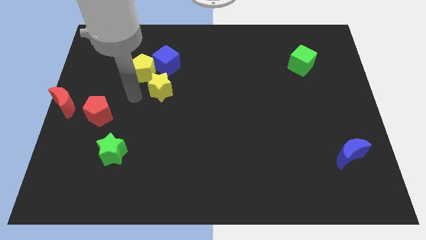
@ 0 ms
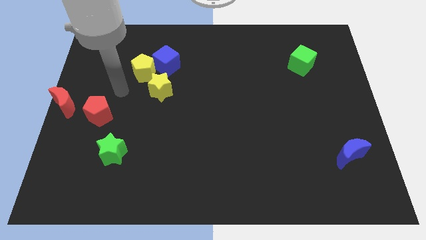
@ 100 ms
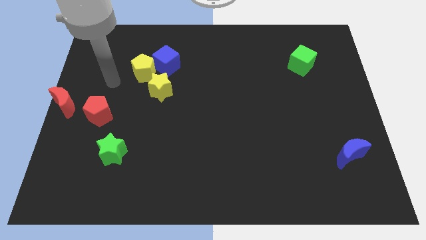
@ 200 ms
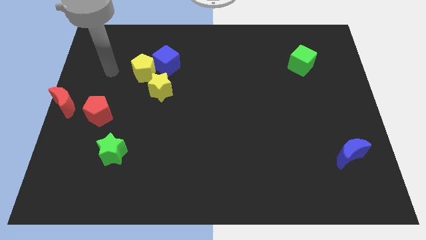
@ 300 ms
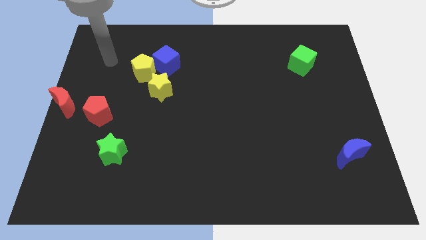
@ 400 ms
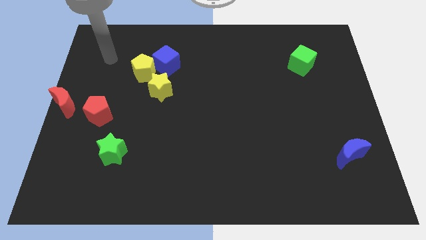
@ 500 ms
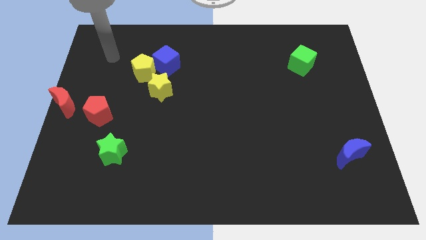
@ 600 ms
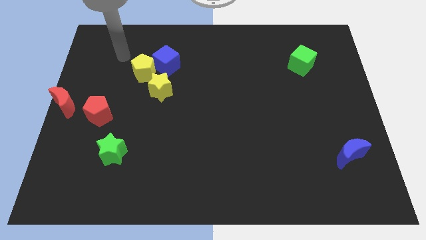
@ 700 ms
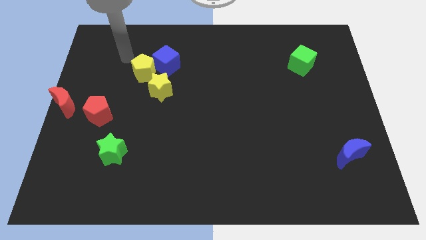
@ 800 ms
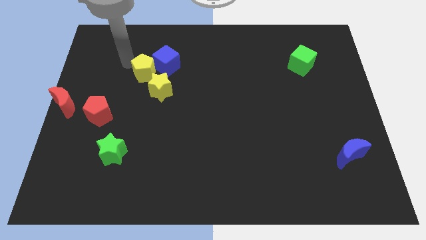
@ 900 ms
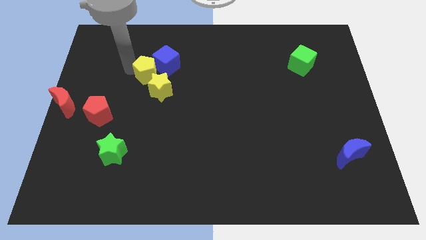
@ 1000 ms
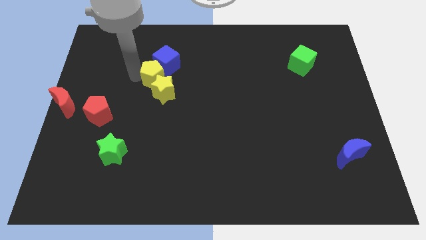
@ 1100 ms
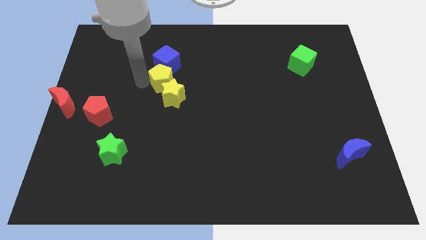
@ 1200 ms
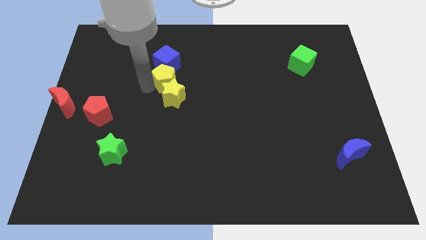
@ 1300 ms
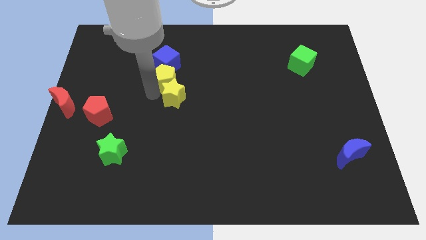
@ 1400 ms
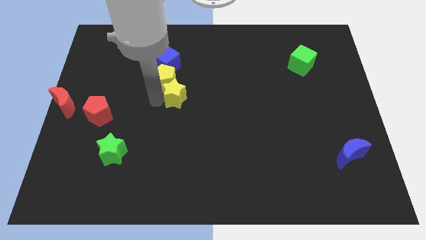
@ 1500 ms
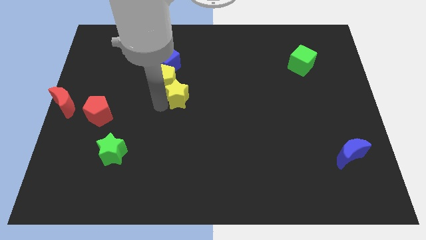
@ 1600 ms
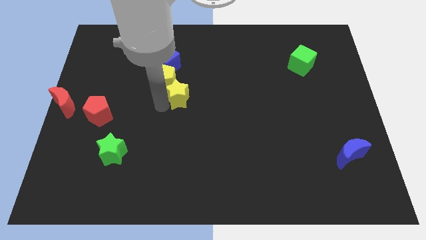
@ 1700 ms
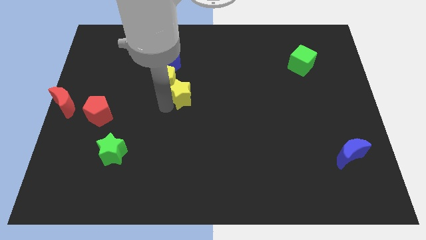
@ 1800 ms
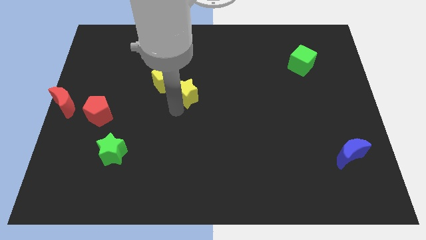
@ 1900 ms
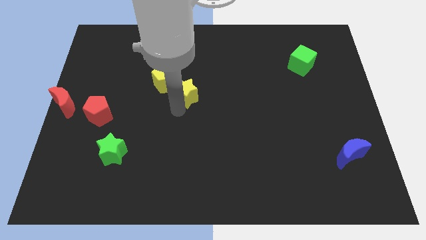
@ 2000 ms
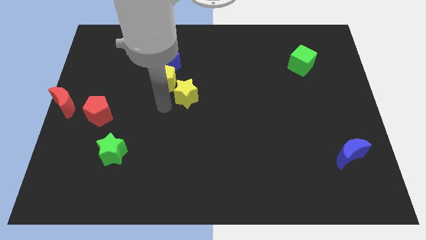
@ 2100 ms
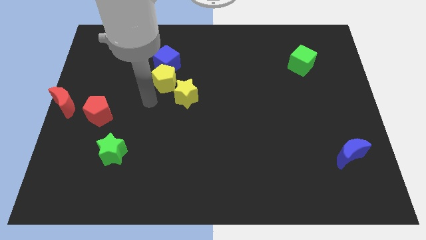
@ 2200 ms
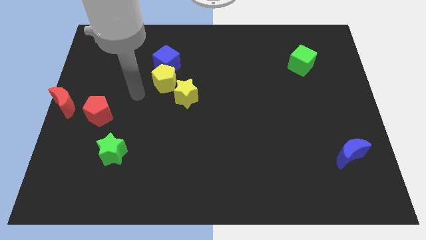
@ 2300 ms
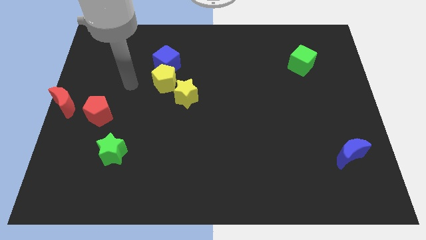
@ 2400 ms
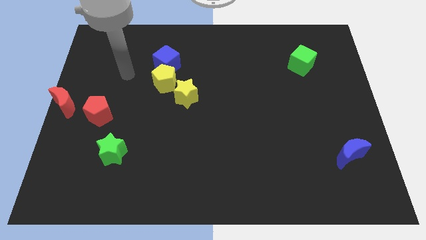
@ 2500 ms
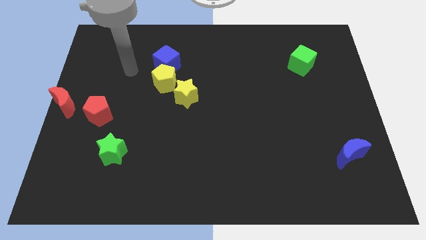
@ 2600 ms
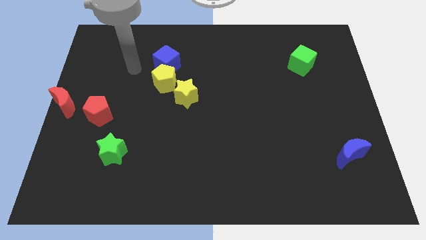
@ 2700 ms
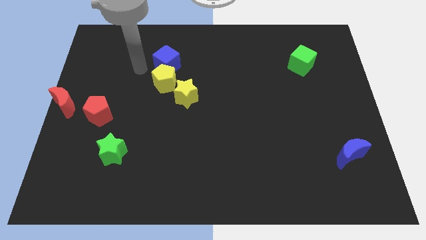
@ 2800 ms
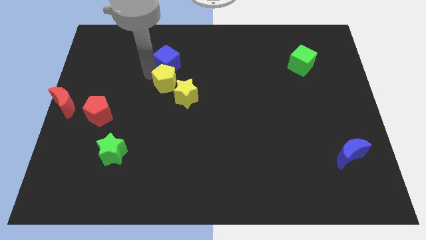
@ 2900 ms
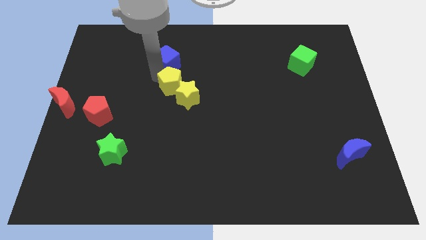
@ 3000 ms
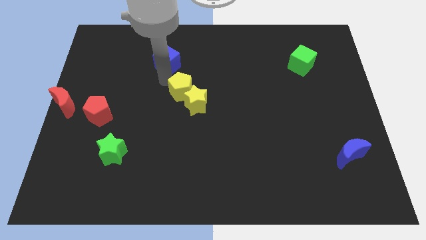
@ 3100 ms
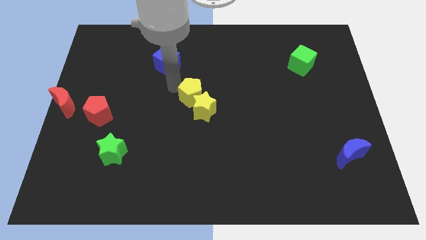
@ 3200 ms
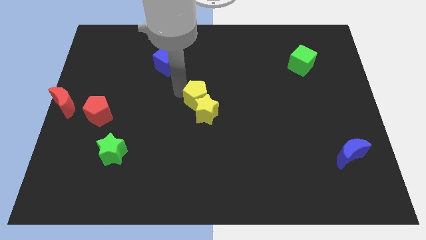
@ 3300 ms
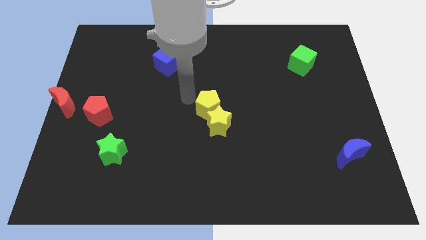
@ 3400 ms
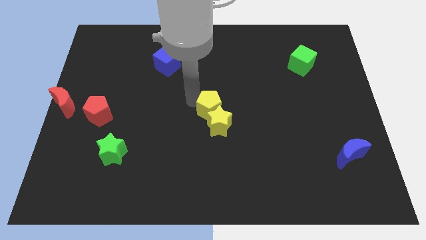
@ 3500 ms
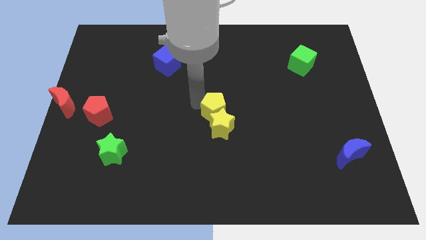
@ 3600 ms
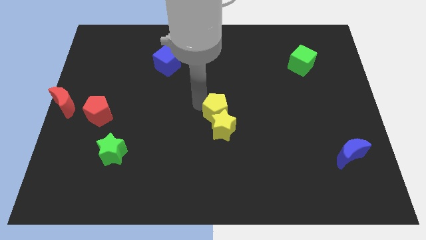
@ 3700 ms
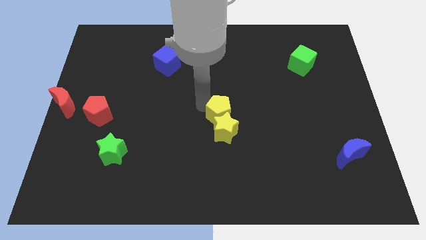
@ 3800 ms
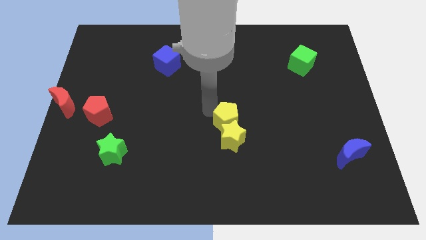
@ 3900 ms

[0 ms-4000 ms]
move yellow blocks to the centre of the board

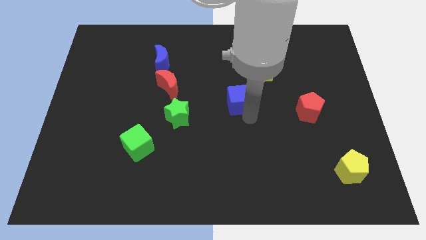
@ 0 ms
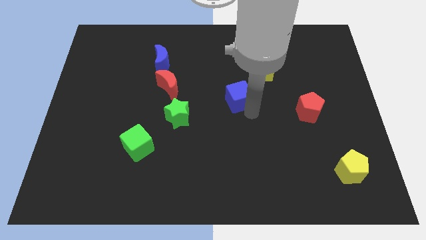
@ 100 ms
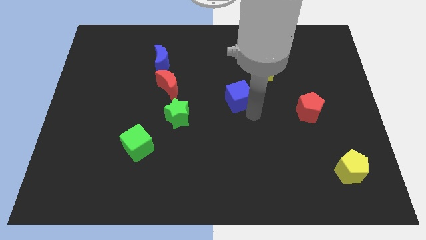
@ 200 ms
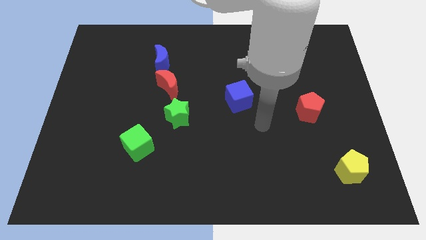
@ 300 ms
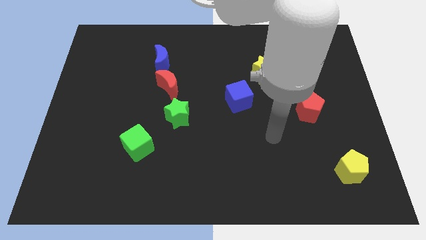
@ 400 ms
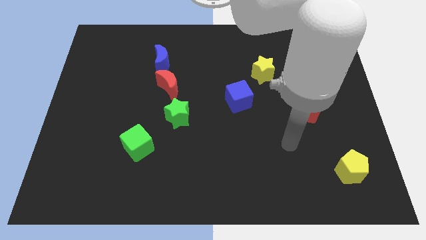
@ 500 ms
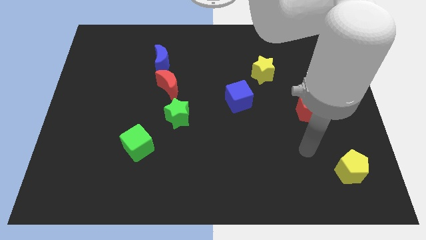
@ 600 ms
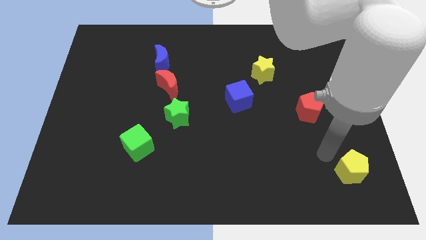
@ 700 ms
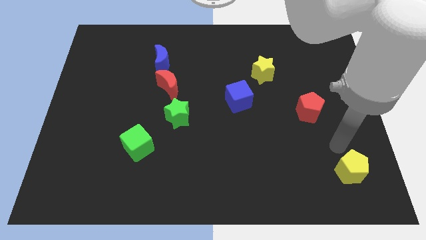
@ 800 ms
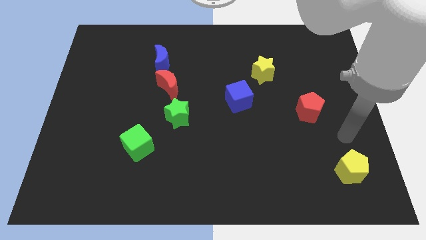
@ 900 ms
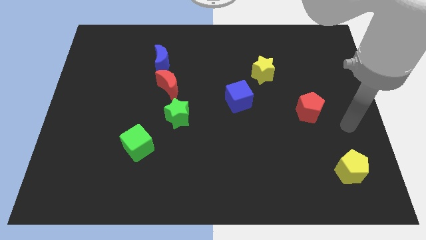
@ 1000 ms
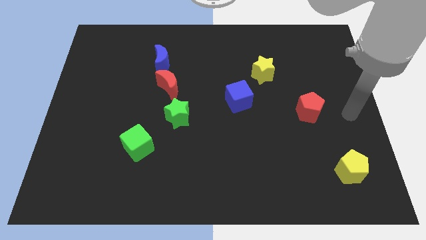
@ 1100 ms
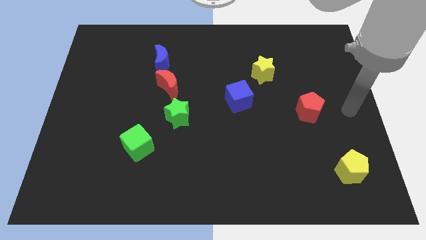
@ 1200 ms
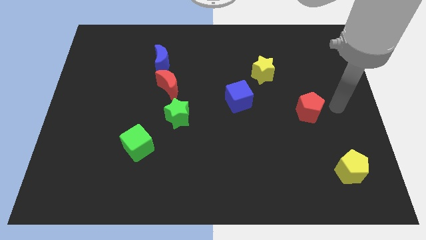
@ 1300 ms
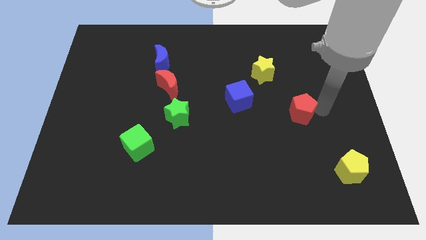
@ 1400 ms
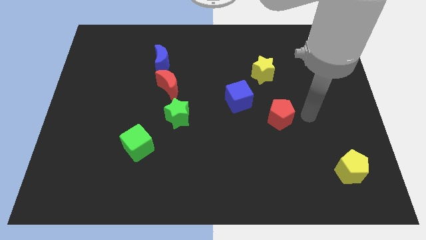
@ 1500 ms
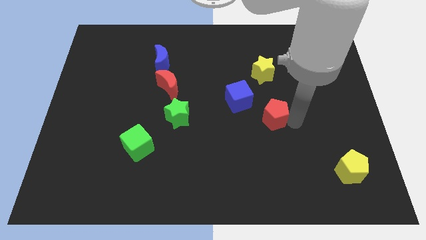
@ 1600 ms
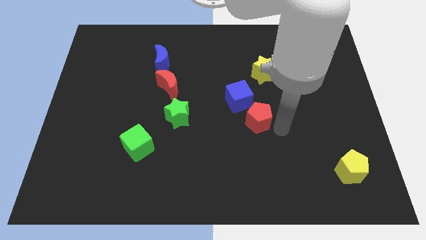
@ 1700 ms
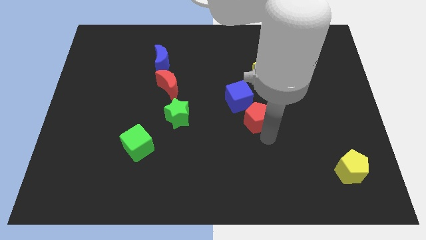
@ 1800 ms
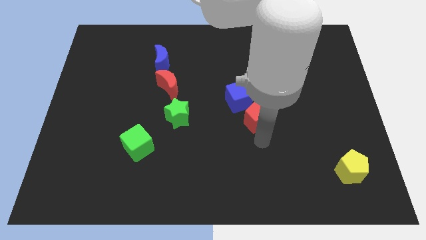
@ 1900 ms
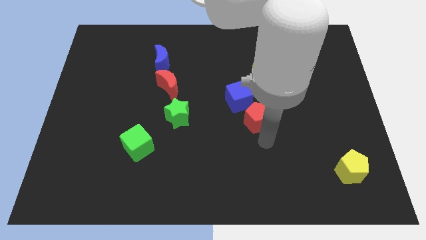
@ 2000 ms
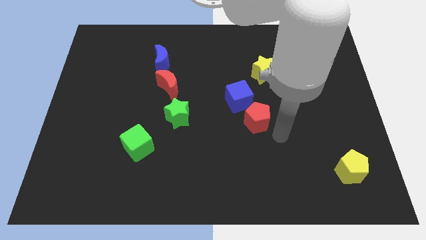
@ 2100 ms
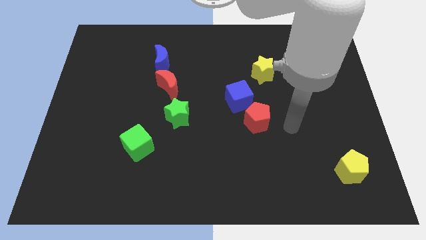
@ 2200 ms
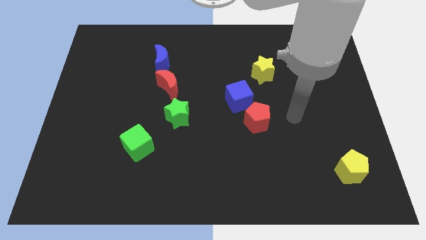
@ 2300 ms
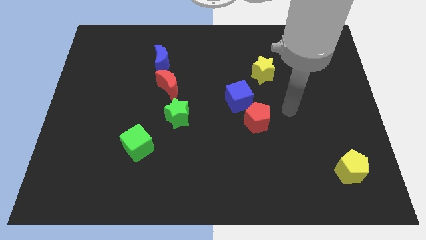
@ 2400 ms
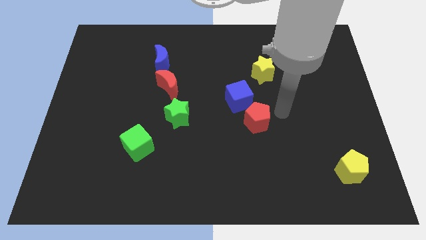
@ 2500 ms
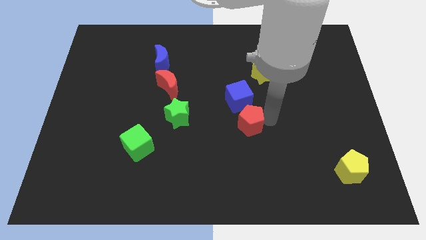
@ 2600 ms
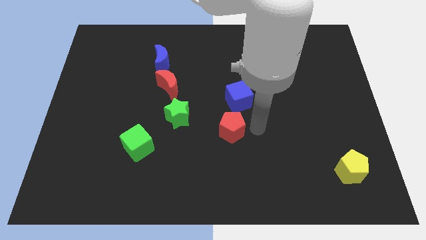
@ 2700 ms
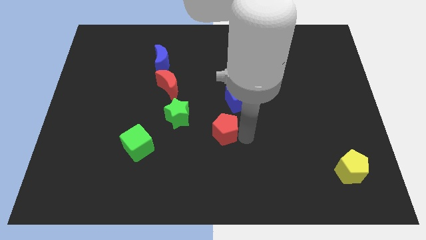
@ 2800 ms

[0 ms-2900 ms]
place the red pentagon bottom right to the green star

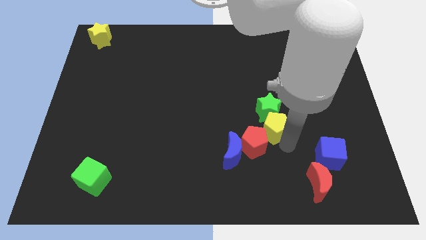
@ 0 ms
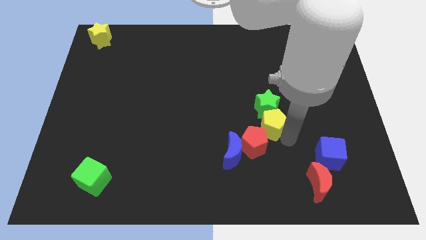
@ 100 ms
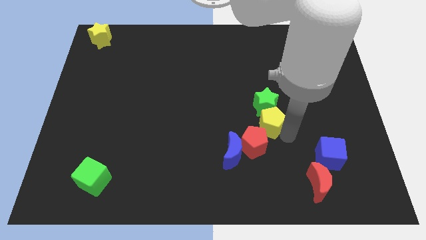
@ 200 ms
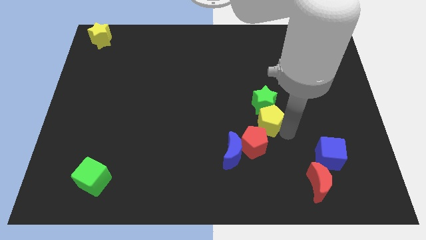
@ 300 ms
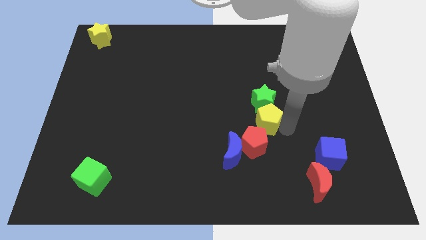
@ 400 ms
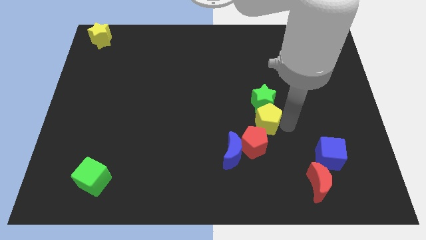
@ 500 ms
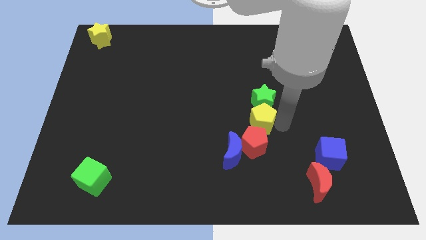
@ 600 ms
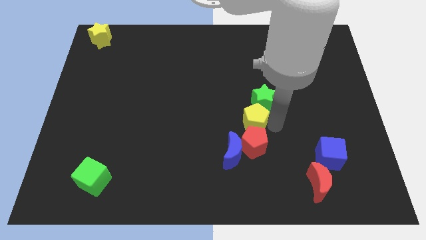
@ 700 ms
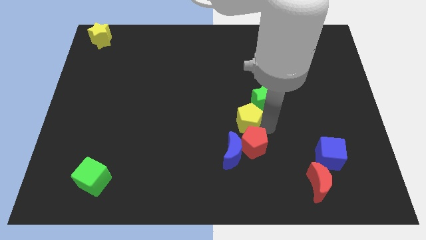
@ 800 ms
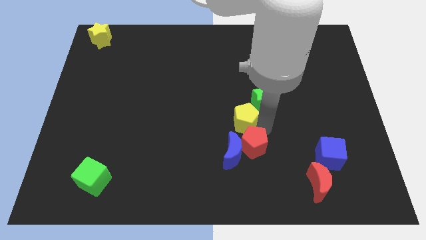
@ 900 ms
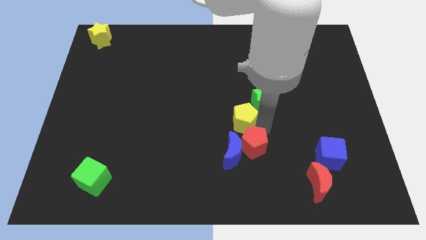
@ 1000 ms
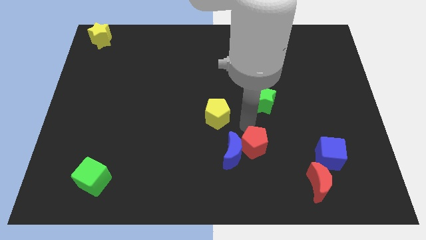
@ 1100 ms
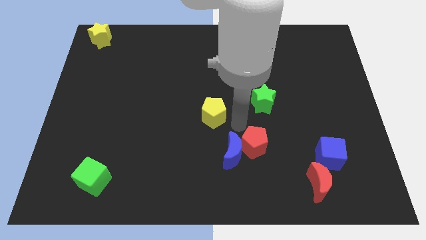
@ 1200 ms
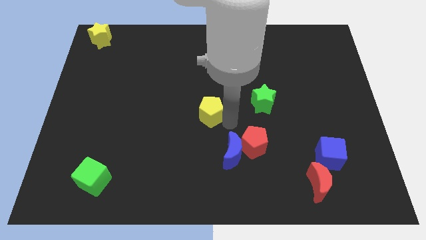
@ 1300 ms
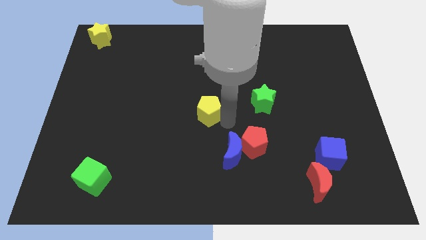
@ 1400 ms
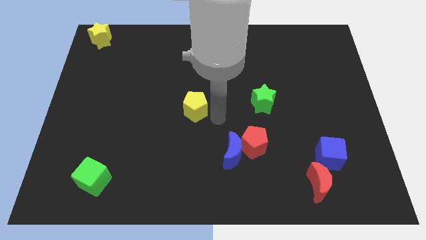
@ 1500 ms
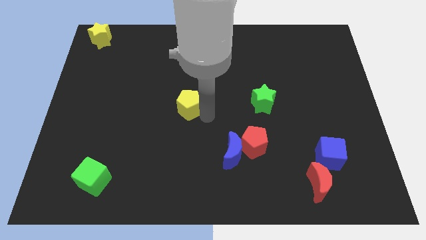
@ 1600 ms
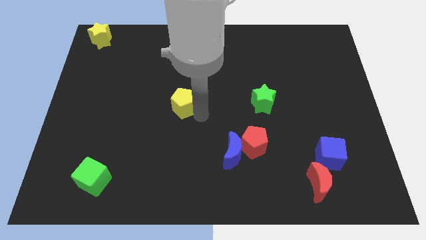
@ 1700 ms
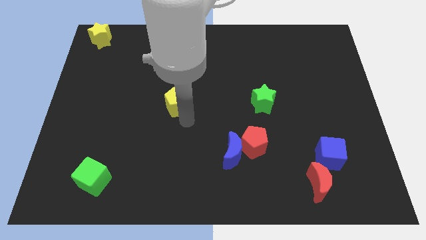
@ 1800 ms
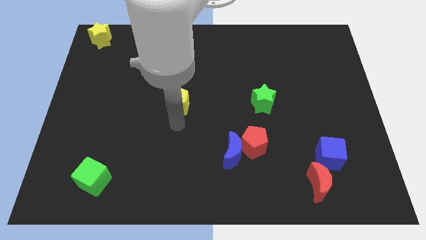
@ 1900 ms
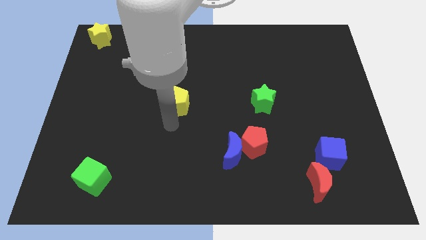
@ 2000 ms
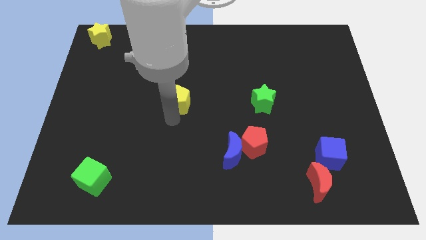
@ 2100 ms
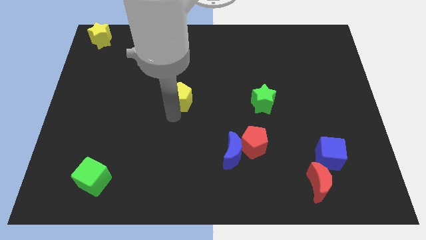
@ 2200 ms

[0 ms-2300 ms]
move the yellow pentagon to the left of the green star
